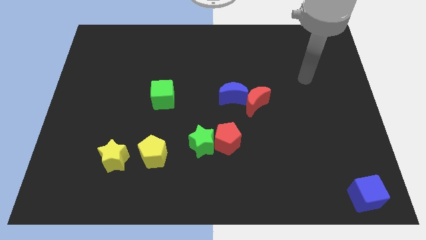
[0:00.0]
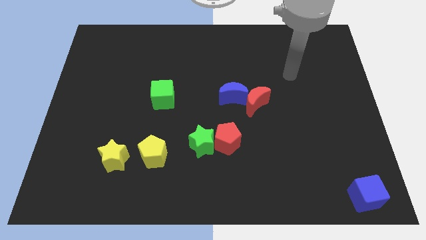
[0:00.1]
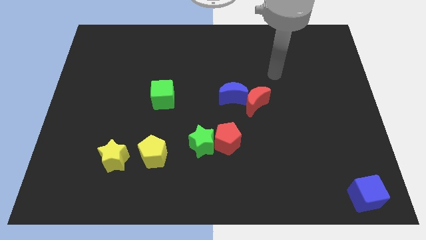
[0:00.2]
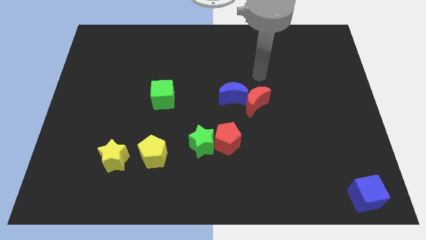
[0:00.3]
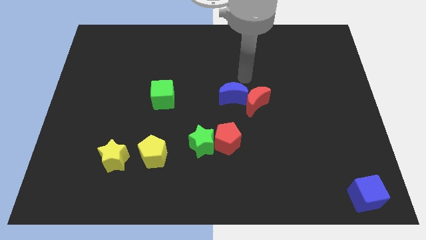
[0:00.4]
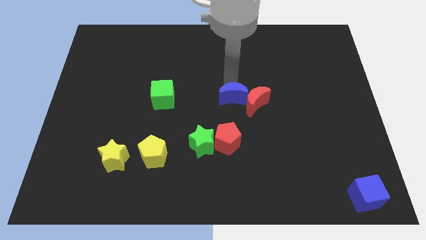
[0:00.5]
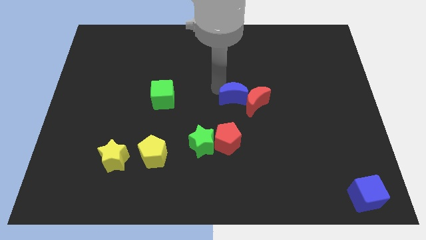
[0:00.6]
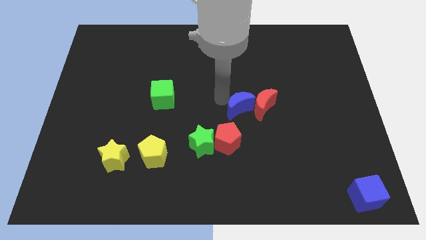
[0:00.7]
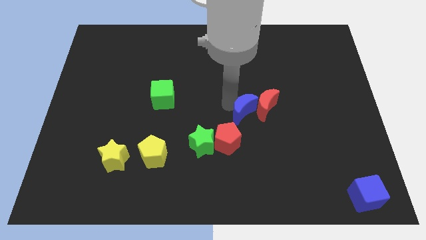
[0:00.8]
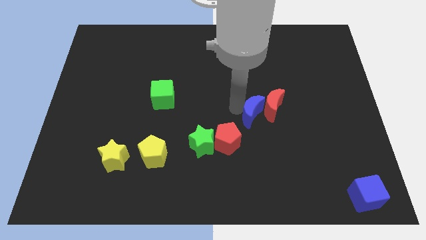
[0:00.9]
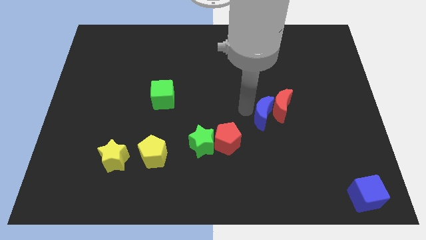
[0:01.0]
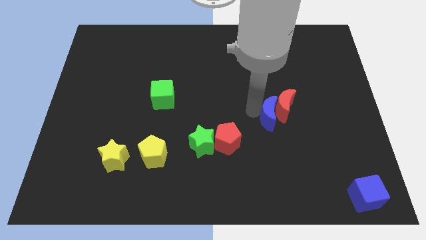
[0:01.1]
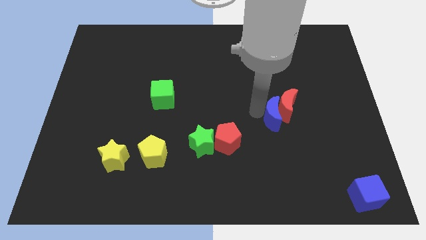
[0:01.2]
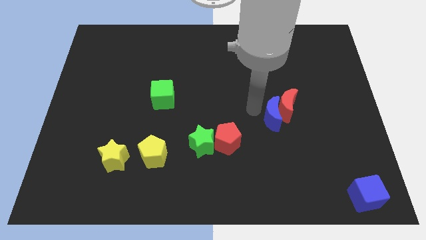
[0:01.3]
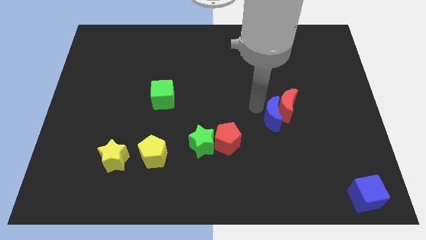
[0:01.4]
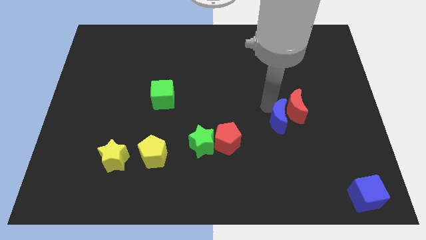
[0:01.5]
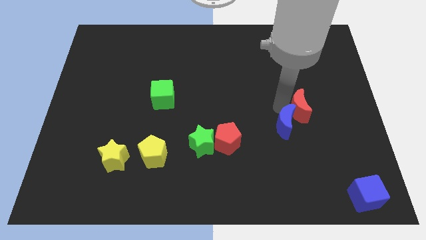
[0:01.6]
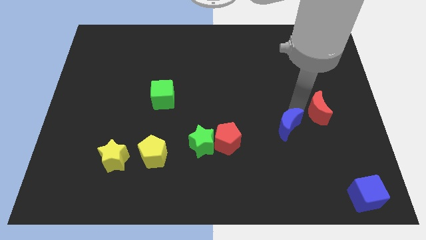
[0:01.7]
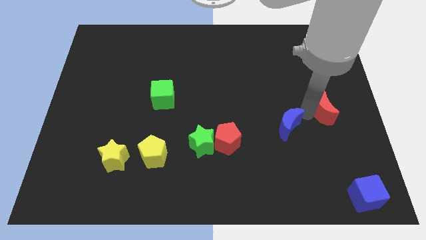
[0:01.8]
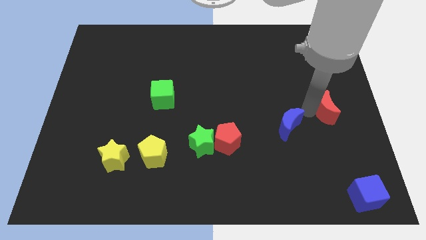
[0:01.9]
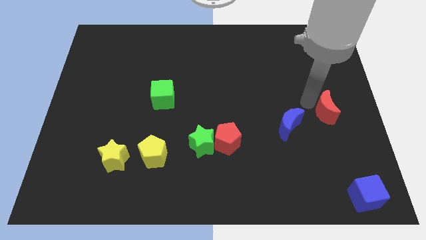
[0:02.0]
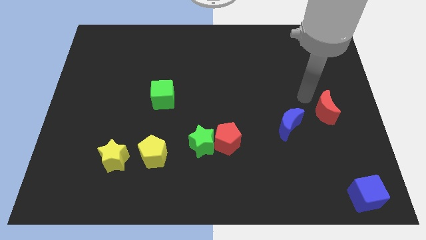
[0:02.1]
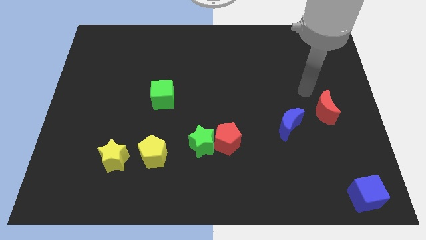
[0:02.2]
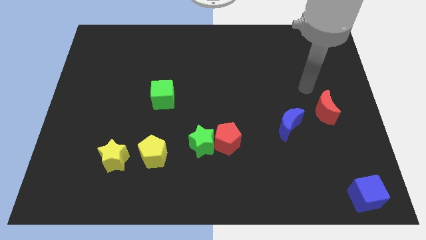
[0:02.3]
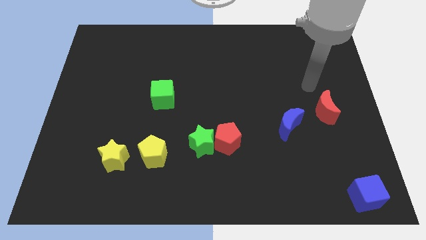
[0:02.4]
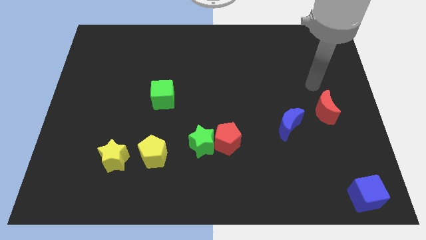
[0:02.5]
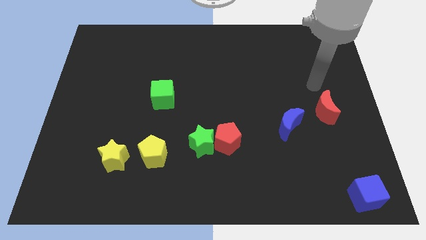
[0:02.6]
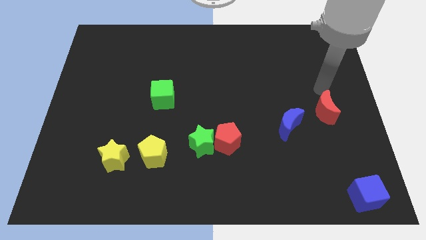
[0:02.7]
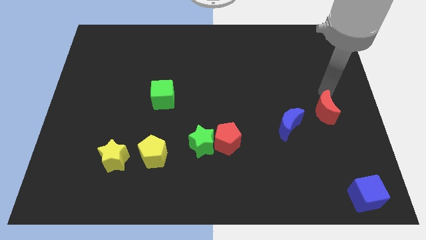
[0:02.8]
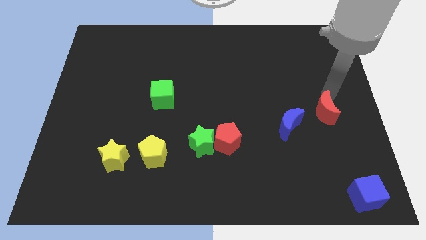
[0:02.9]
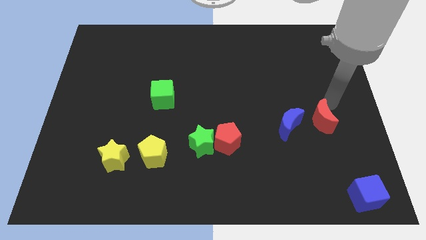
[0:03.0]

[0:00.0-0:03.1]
separate red moon and the blue moon

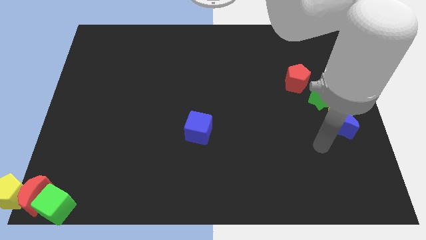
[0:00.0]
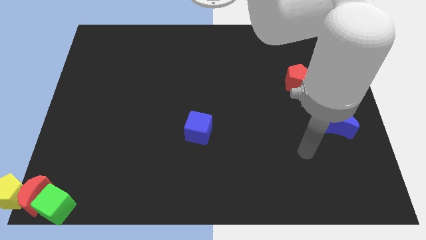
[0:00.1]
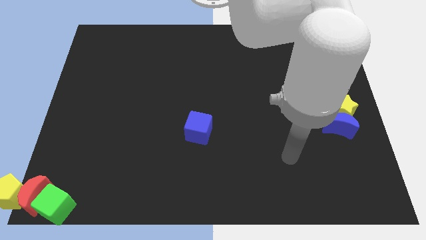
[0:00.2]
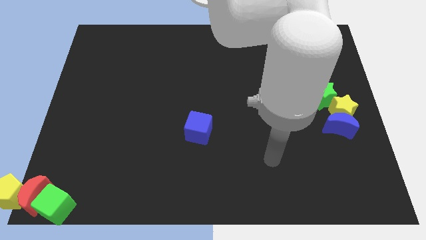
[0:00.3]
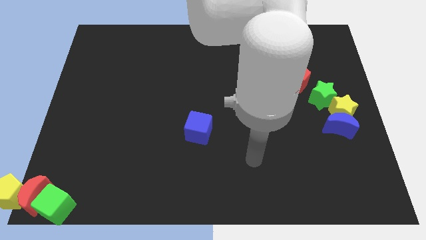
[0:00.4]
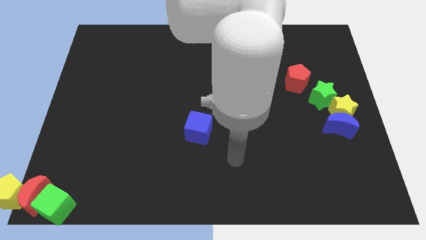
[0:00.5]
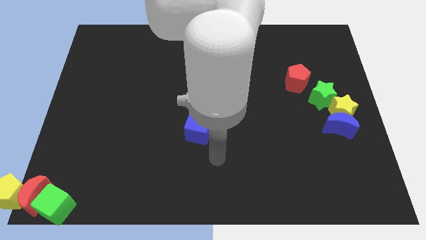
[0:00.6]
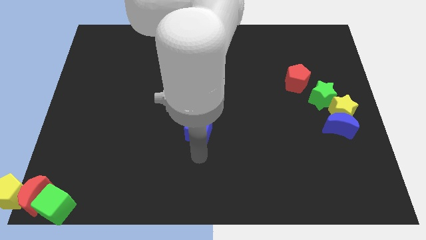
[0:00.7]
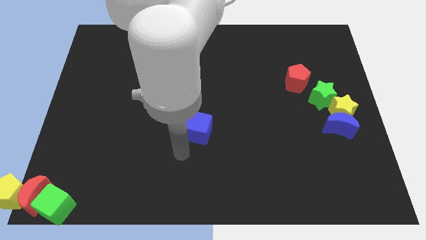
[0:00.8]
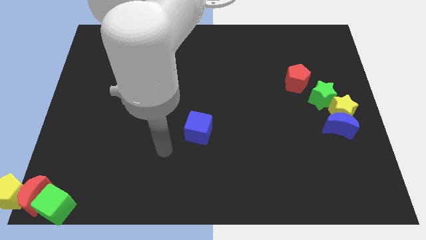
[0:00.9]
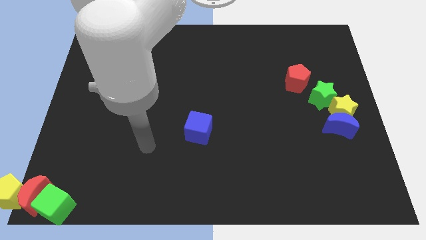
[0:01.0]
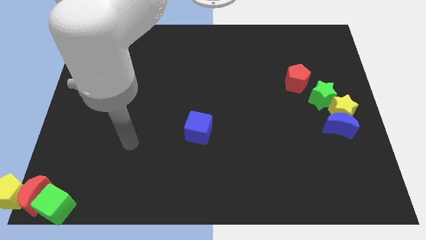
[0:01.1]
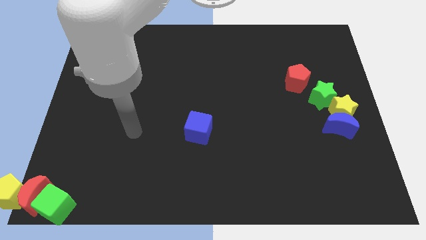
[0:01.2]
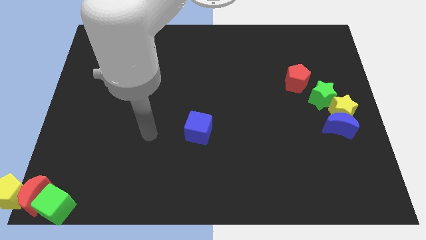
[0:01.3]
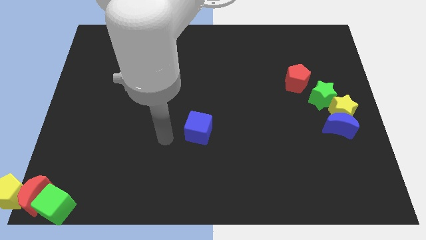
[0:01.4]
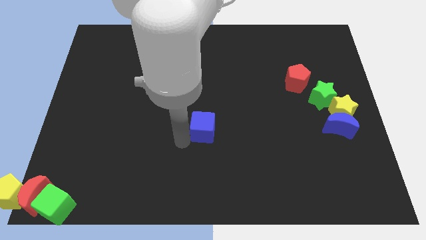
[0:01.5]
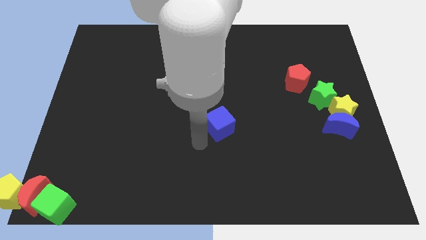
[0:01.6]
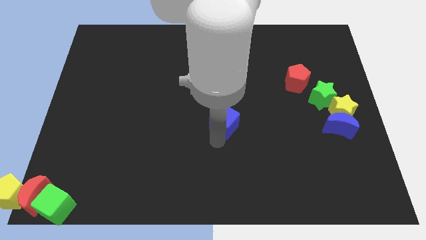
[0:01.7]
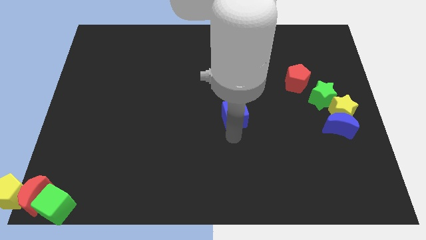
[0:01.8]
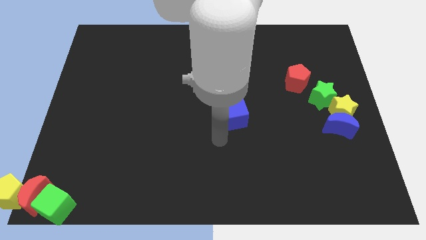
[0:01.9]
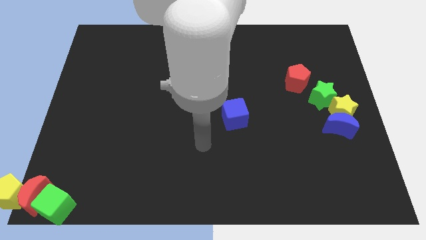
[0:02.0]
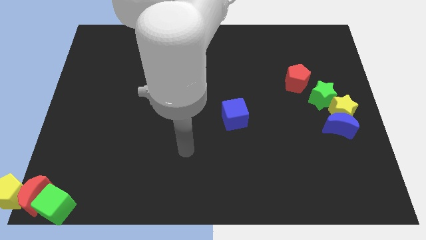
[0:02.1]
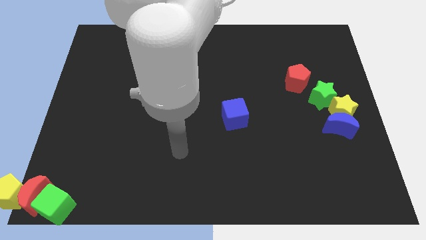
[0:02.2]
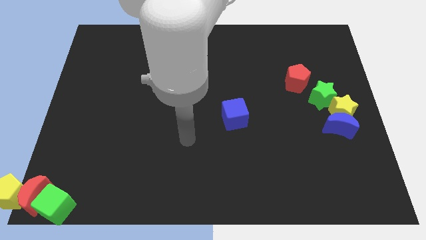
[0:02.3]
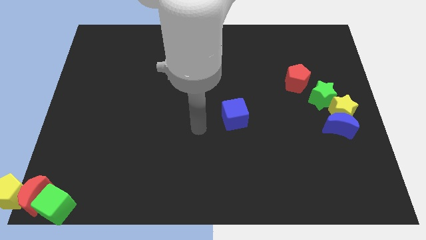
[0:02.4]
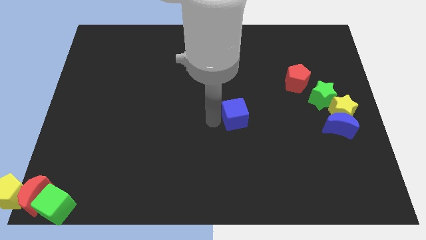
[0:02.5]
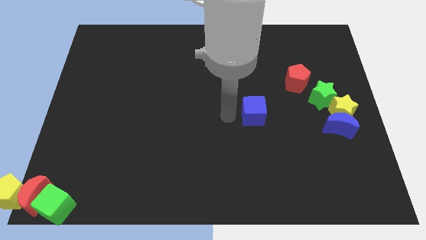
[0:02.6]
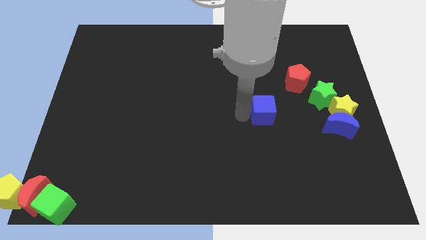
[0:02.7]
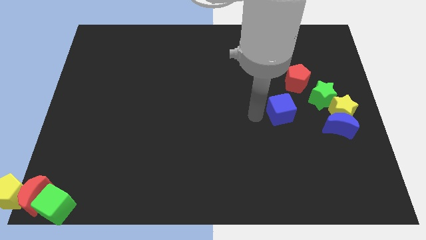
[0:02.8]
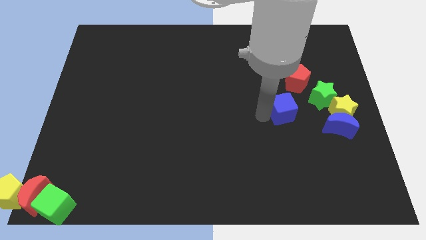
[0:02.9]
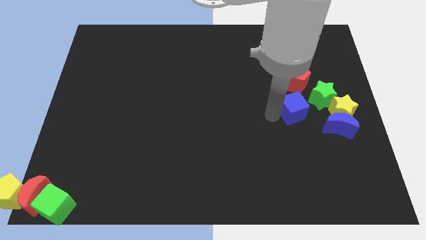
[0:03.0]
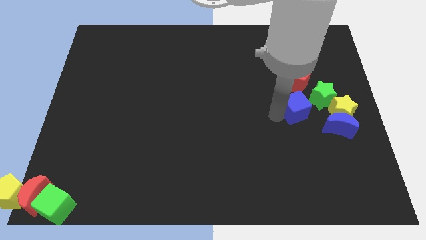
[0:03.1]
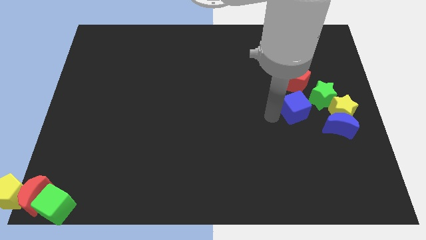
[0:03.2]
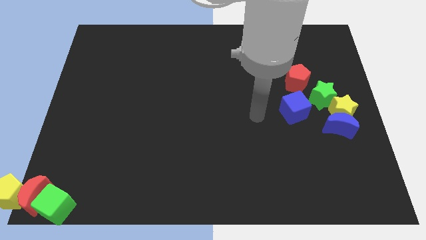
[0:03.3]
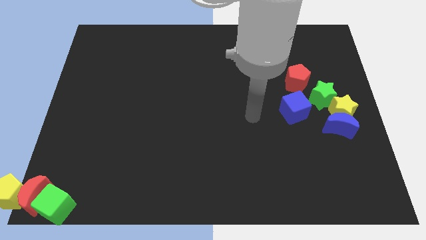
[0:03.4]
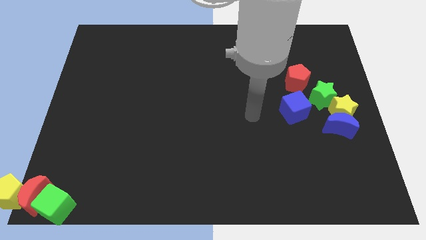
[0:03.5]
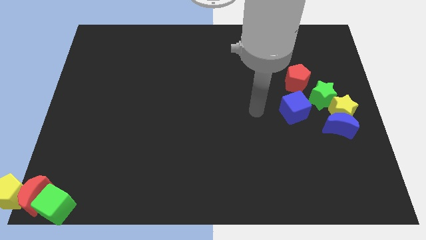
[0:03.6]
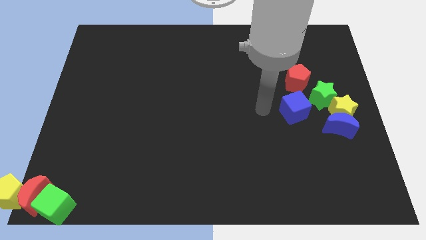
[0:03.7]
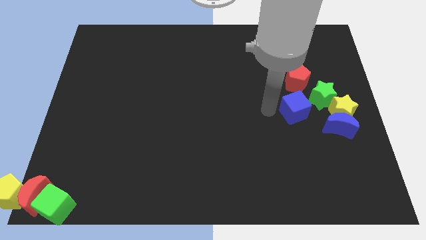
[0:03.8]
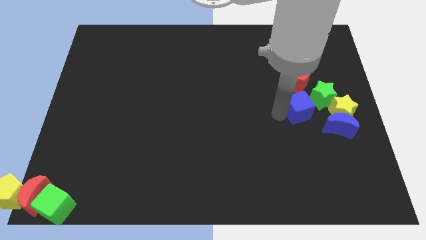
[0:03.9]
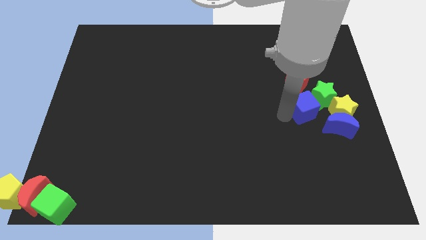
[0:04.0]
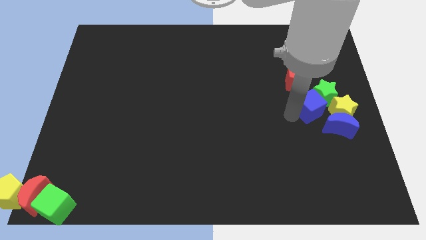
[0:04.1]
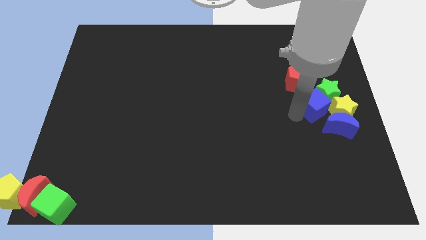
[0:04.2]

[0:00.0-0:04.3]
push the blue cube into the green star

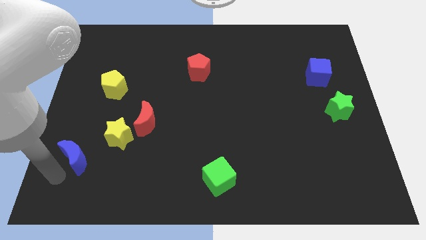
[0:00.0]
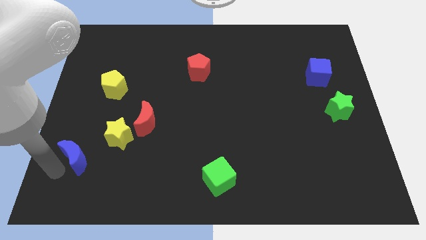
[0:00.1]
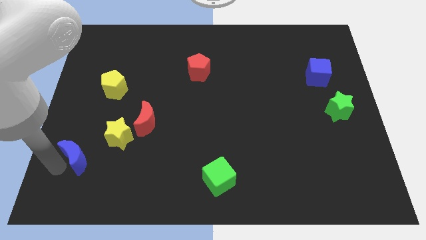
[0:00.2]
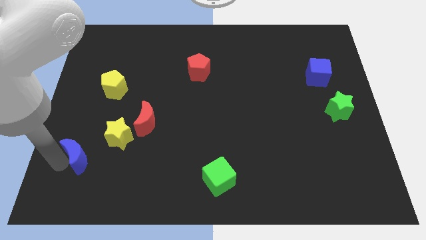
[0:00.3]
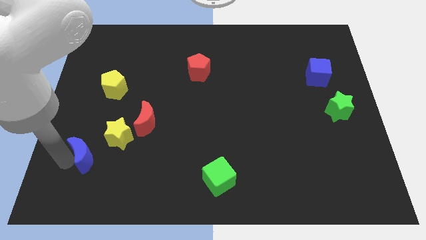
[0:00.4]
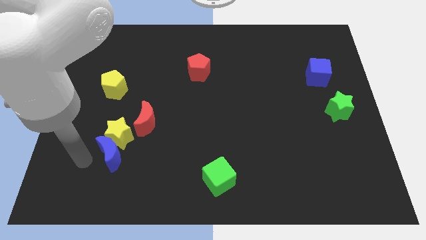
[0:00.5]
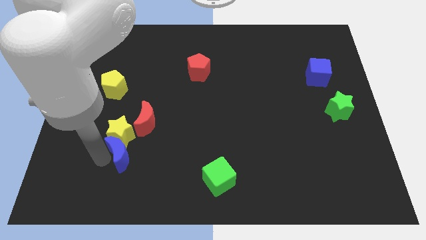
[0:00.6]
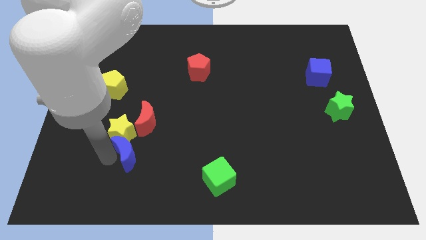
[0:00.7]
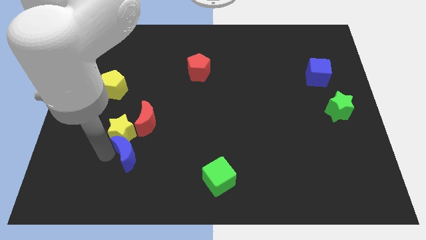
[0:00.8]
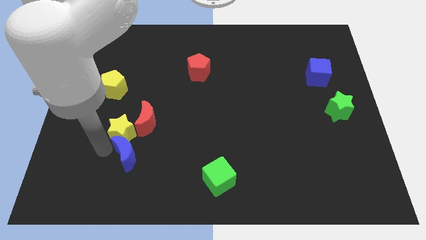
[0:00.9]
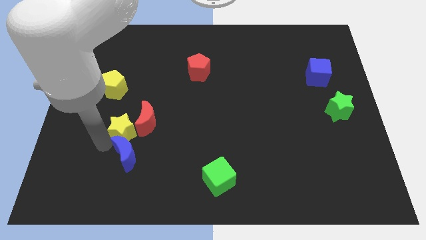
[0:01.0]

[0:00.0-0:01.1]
move the blue moon below the yellow star

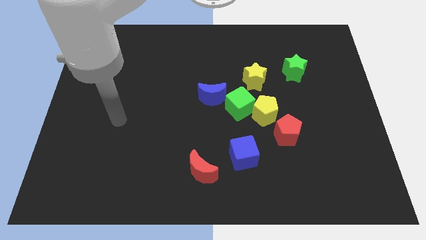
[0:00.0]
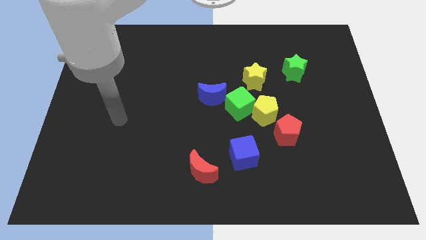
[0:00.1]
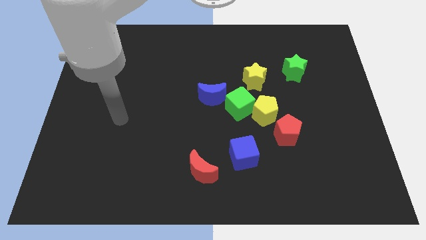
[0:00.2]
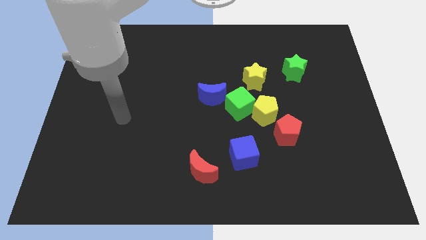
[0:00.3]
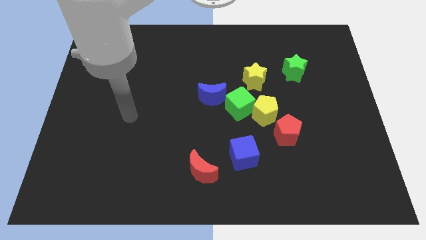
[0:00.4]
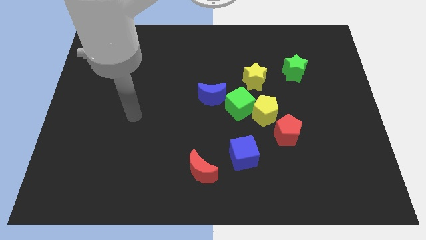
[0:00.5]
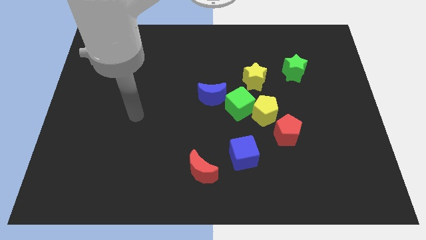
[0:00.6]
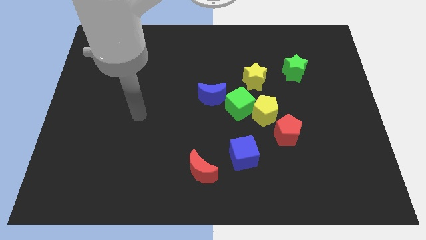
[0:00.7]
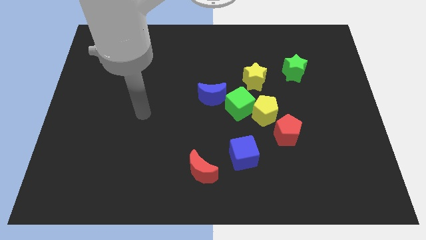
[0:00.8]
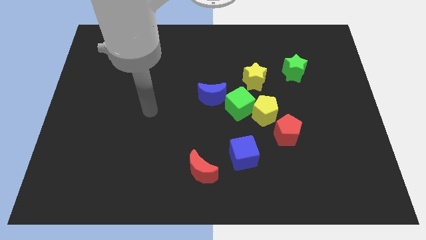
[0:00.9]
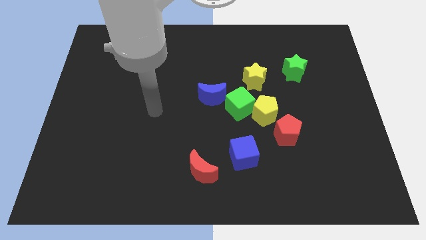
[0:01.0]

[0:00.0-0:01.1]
place the arm diagonally to the red moon
